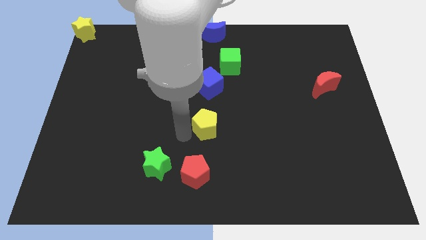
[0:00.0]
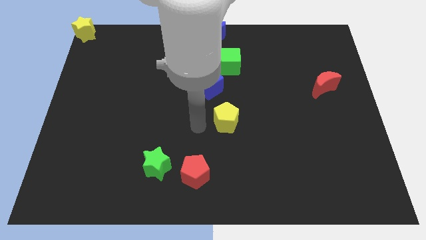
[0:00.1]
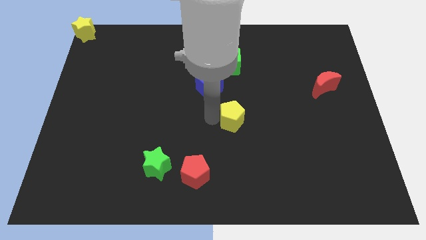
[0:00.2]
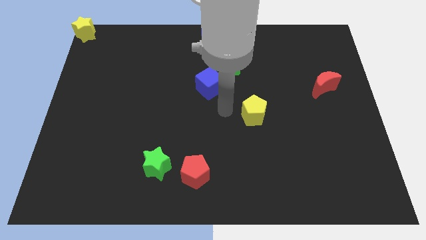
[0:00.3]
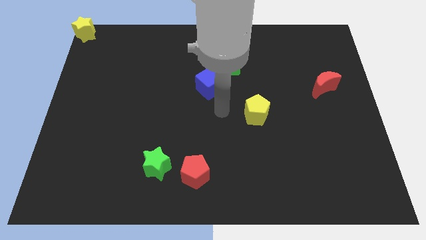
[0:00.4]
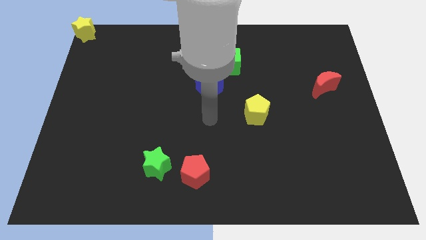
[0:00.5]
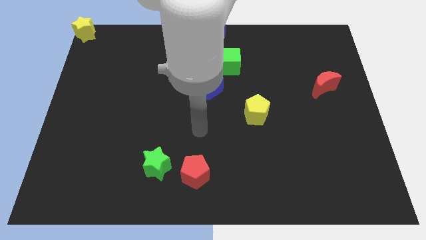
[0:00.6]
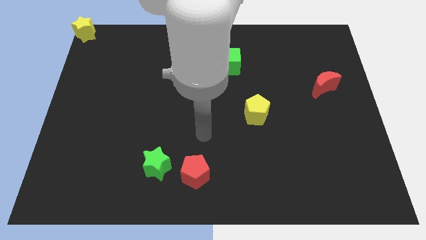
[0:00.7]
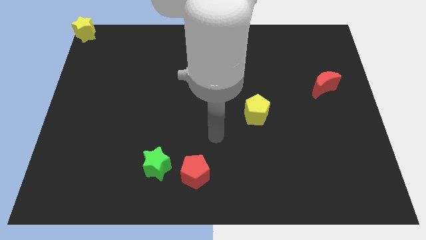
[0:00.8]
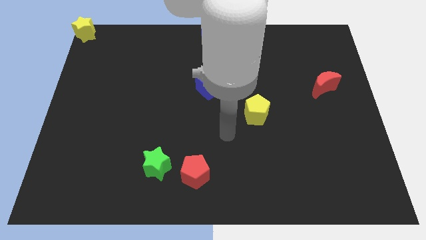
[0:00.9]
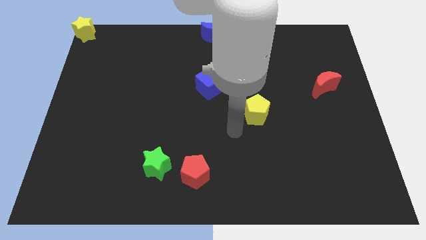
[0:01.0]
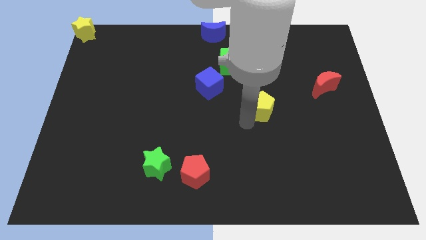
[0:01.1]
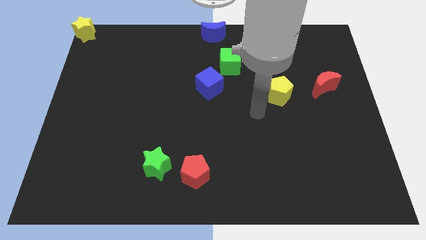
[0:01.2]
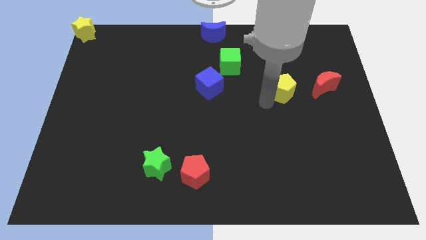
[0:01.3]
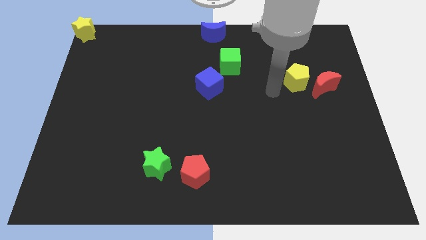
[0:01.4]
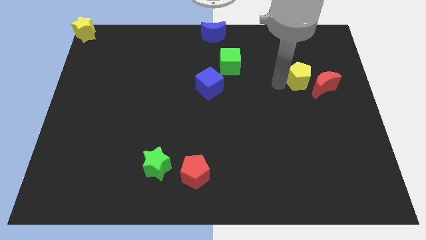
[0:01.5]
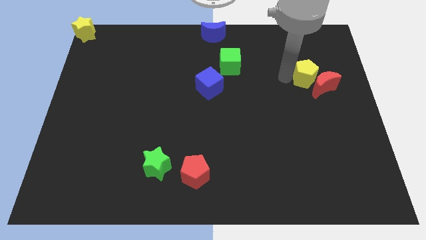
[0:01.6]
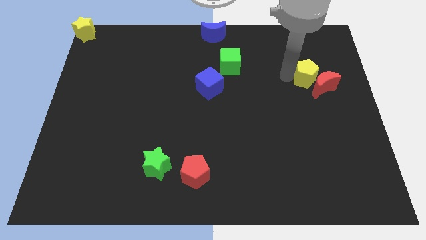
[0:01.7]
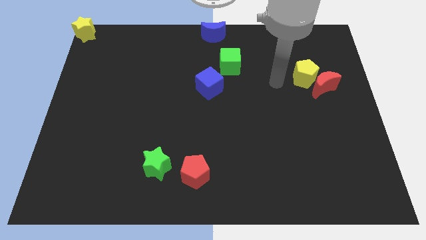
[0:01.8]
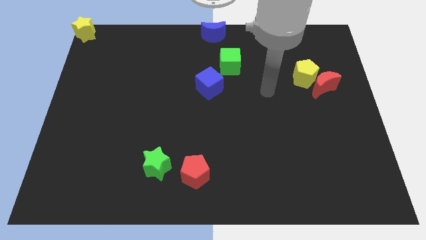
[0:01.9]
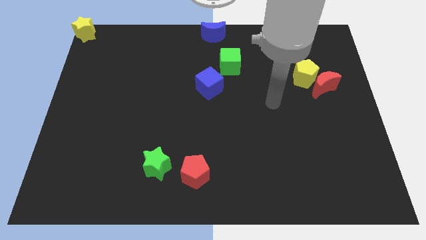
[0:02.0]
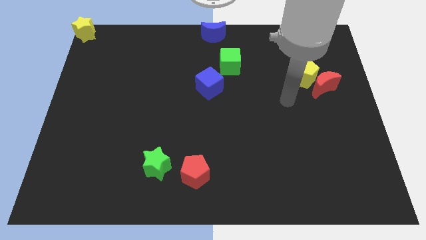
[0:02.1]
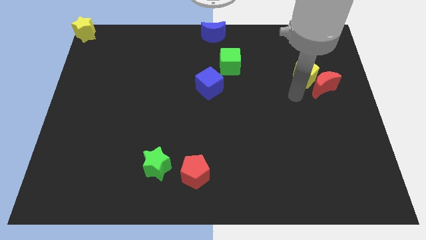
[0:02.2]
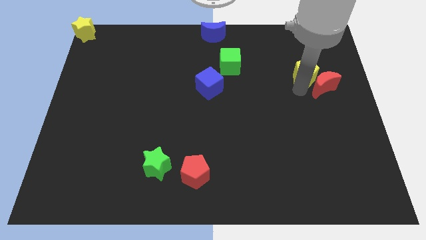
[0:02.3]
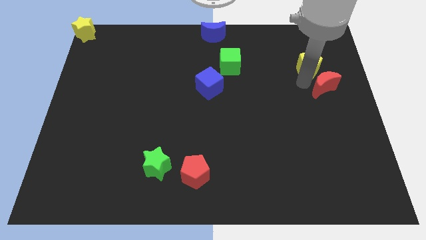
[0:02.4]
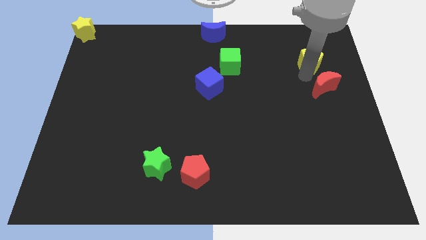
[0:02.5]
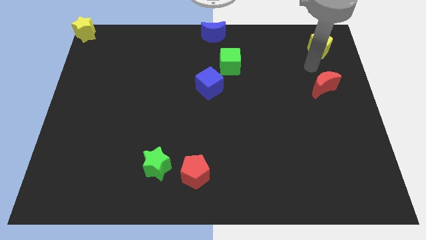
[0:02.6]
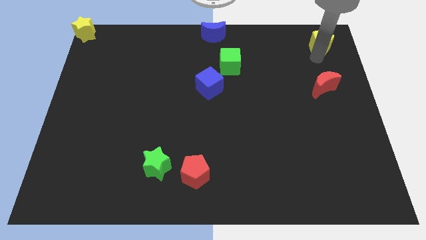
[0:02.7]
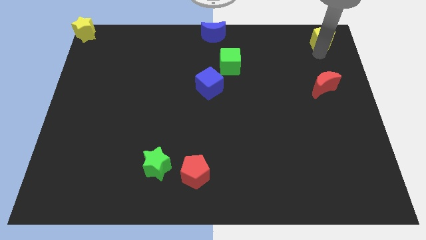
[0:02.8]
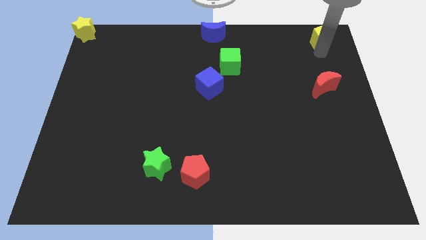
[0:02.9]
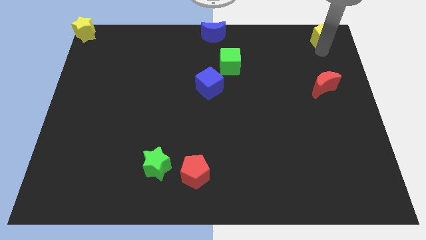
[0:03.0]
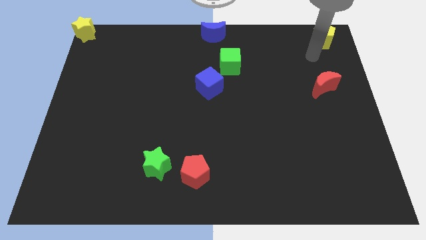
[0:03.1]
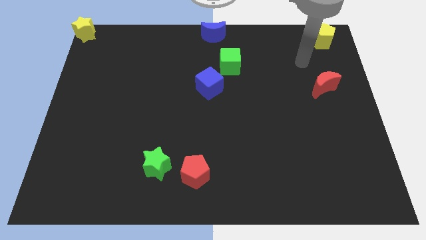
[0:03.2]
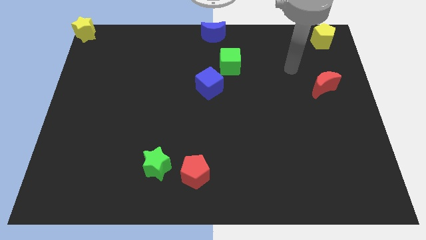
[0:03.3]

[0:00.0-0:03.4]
place yellow pentagon to the top right

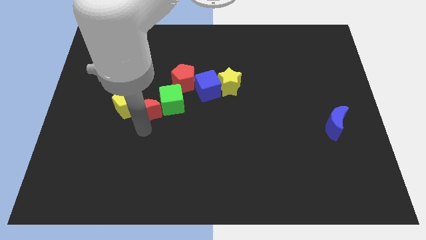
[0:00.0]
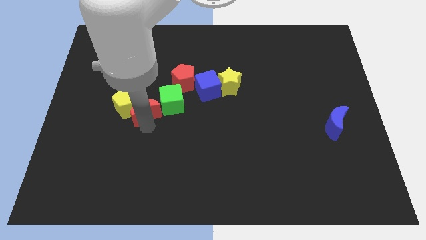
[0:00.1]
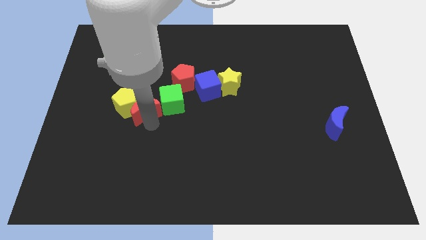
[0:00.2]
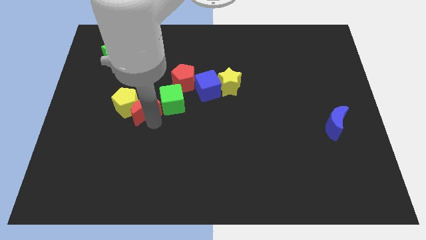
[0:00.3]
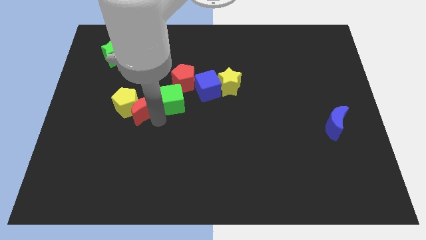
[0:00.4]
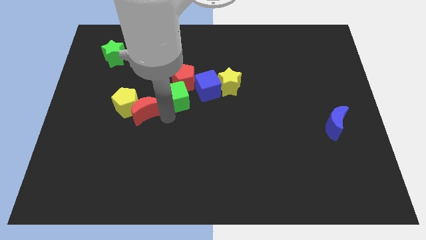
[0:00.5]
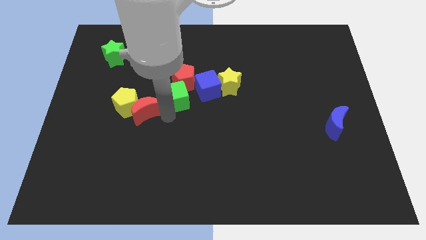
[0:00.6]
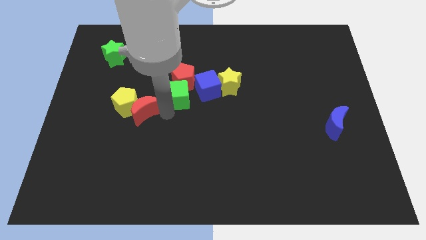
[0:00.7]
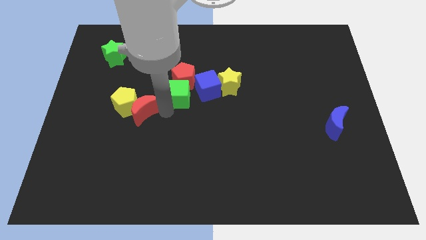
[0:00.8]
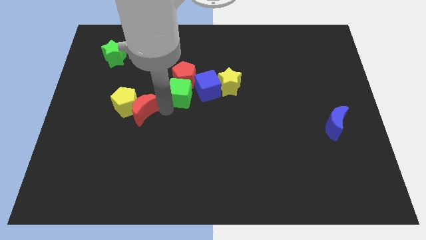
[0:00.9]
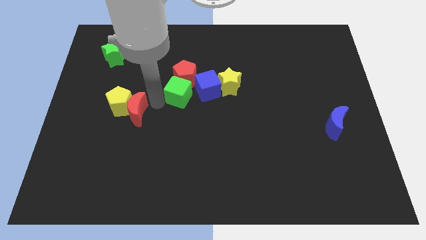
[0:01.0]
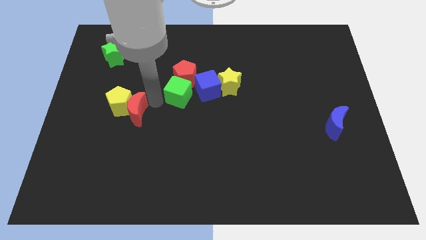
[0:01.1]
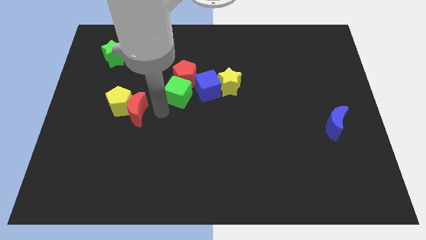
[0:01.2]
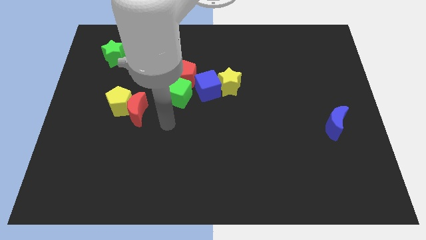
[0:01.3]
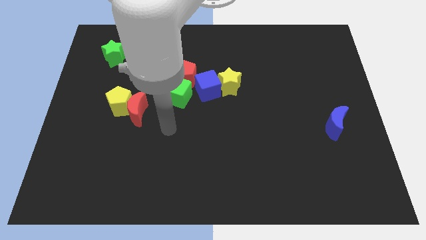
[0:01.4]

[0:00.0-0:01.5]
separate green cube and the red moon

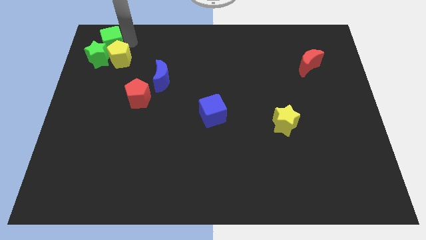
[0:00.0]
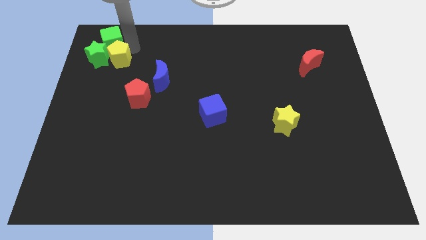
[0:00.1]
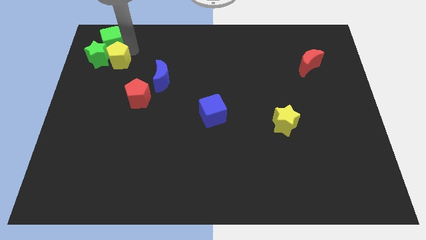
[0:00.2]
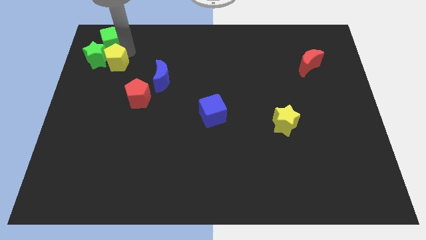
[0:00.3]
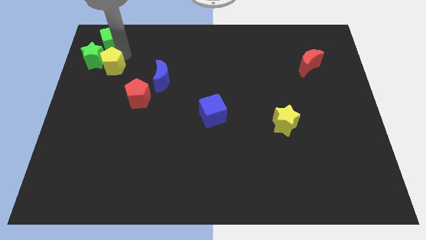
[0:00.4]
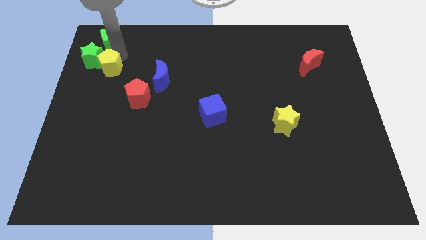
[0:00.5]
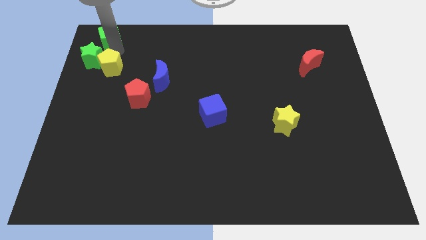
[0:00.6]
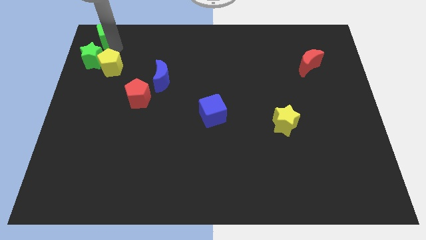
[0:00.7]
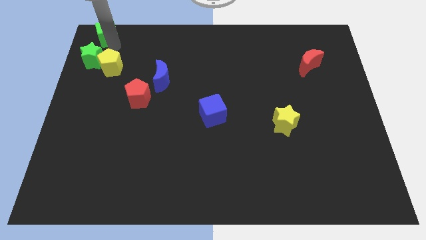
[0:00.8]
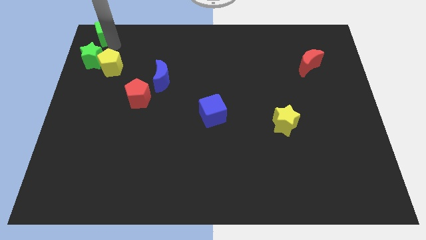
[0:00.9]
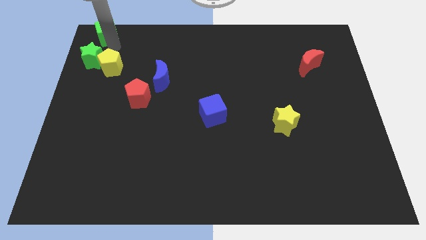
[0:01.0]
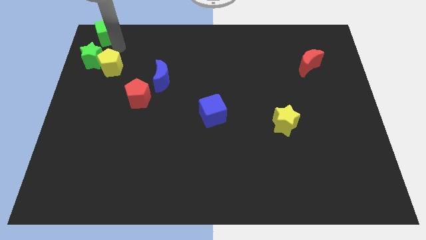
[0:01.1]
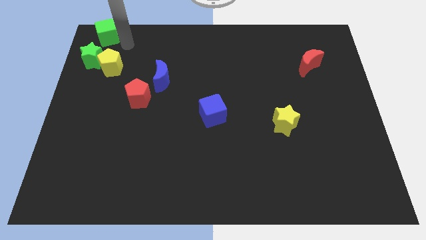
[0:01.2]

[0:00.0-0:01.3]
separate the yellow pentagon and green cube from each other

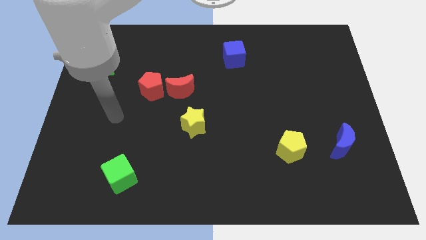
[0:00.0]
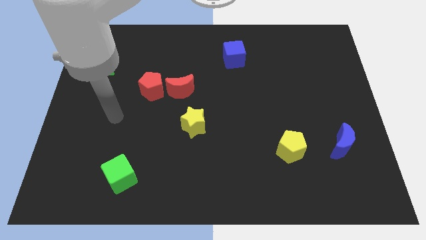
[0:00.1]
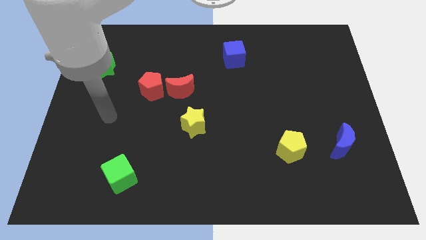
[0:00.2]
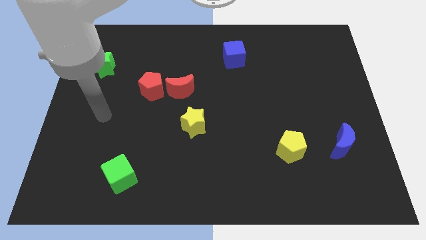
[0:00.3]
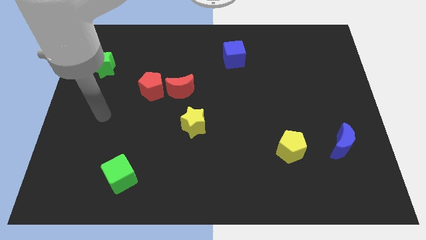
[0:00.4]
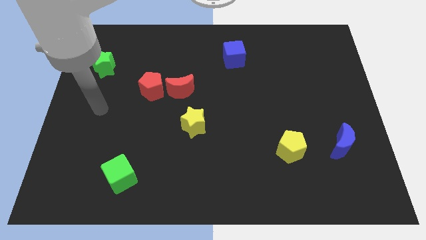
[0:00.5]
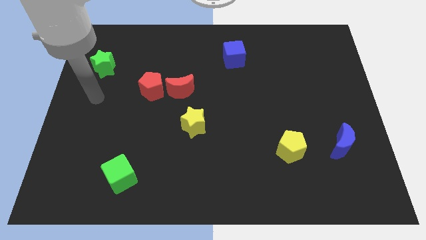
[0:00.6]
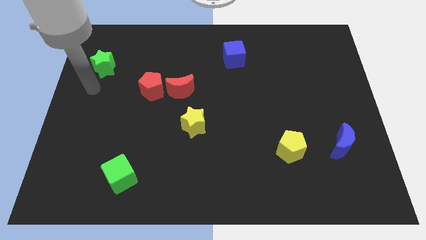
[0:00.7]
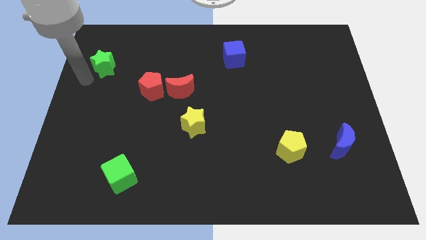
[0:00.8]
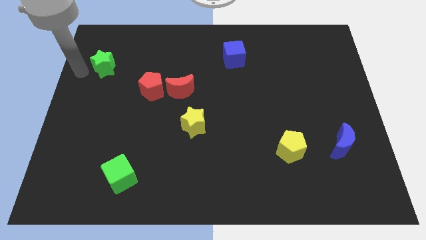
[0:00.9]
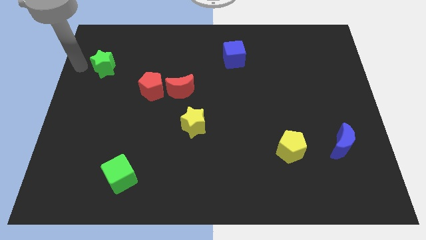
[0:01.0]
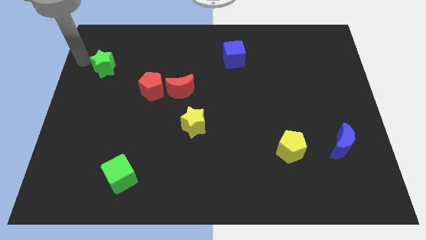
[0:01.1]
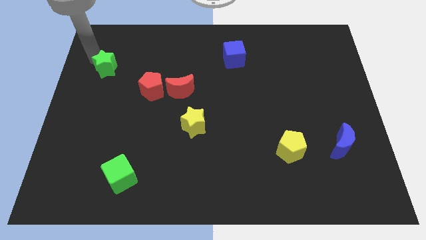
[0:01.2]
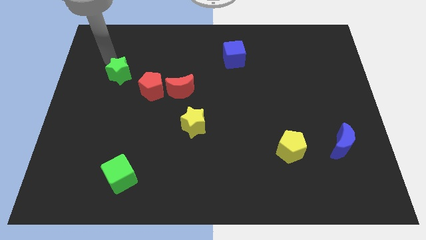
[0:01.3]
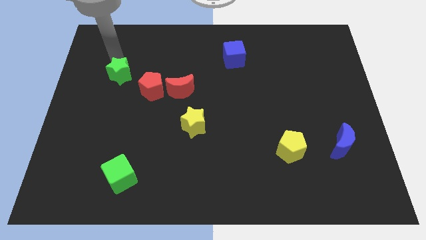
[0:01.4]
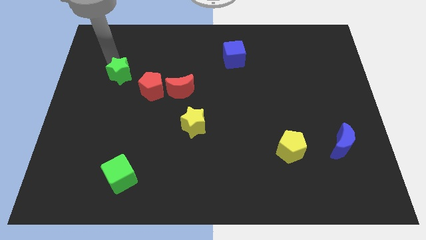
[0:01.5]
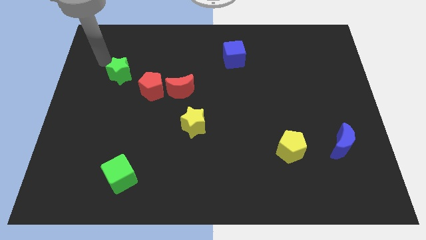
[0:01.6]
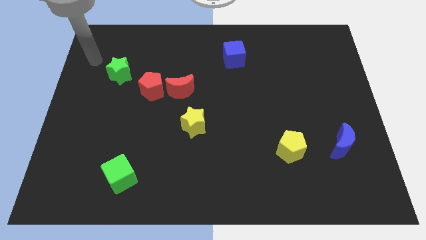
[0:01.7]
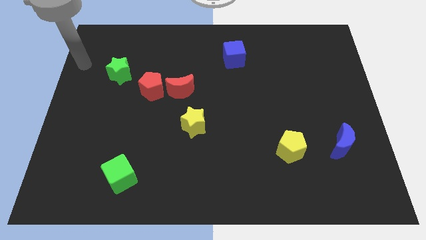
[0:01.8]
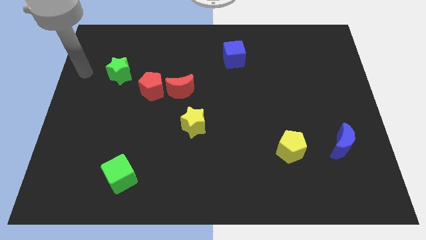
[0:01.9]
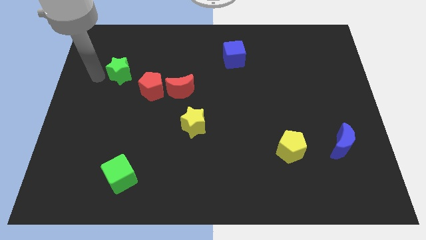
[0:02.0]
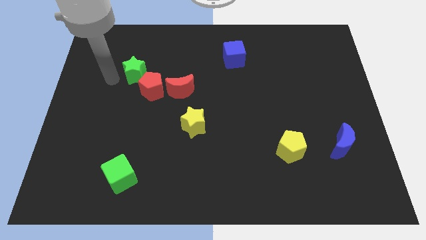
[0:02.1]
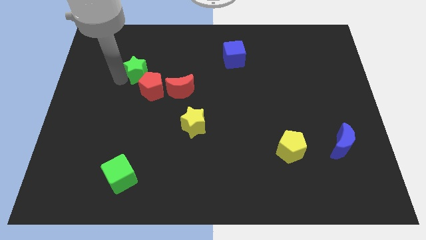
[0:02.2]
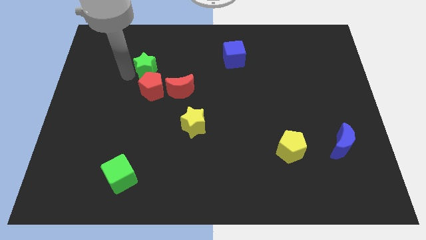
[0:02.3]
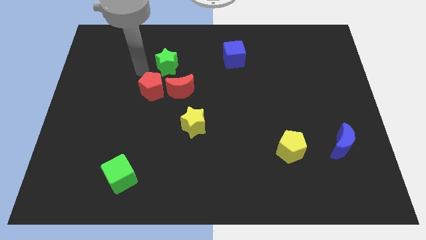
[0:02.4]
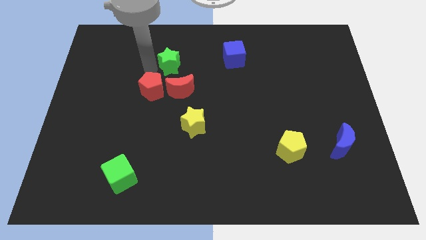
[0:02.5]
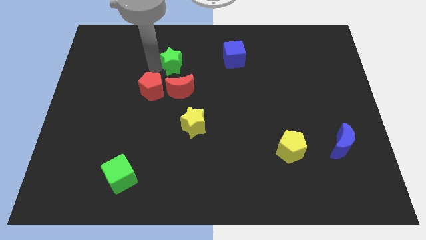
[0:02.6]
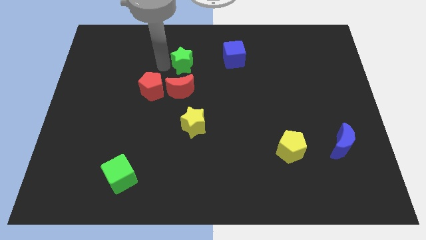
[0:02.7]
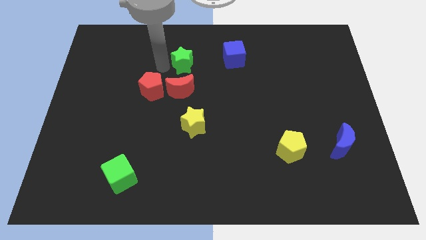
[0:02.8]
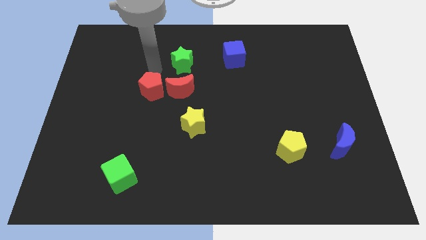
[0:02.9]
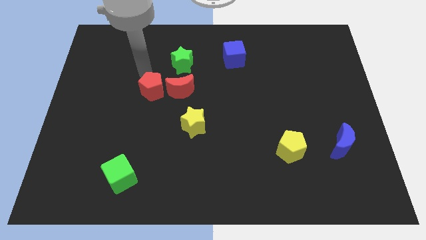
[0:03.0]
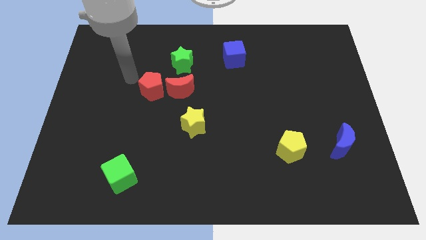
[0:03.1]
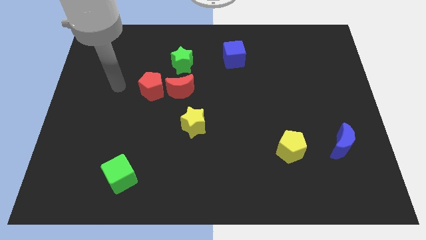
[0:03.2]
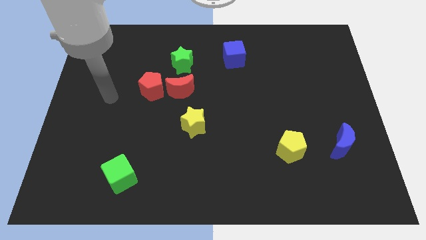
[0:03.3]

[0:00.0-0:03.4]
move the green star towards the blue cube
